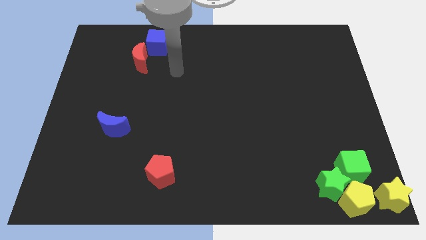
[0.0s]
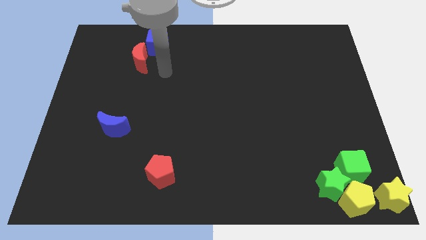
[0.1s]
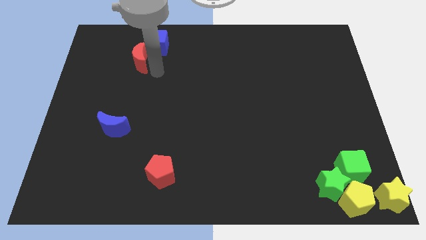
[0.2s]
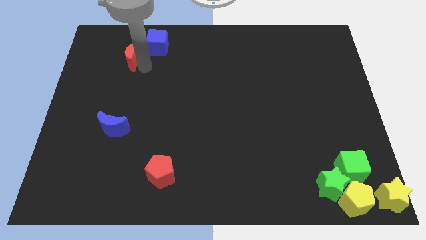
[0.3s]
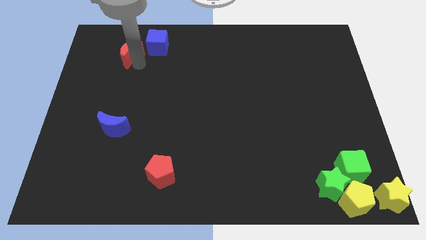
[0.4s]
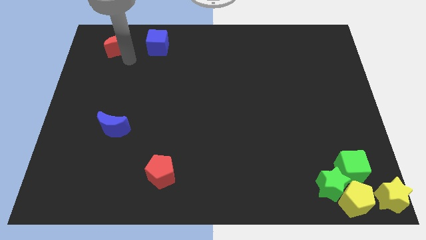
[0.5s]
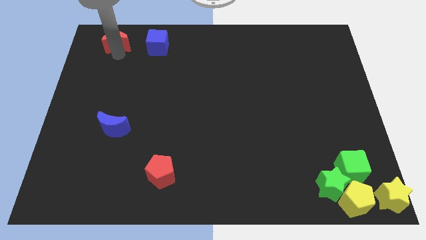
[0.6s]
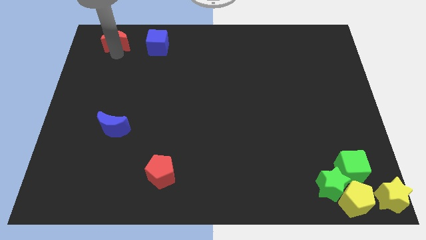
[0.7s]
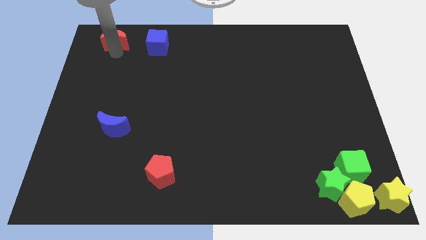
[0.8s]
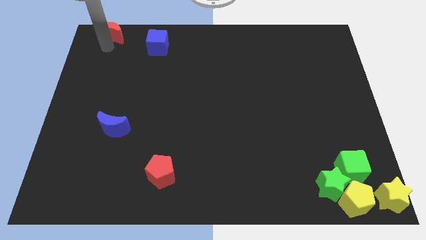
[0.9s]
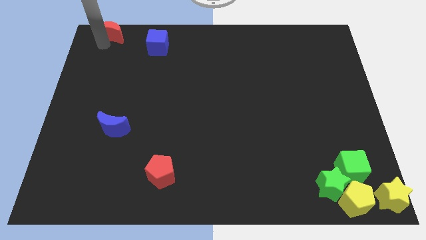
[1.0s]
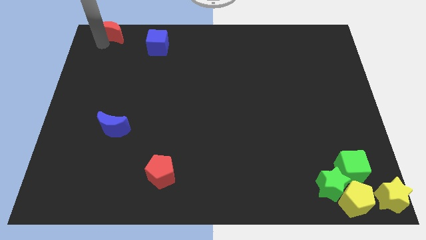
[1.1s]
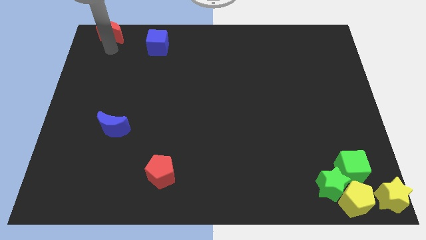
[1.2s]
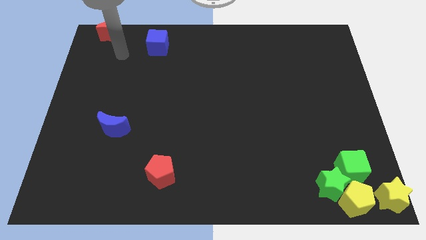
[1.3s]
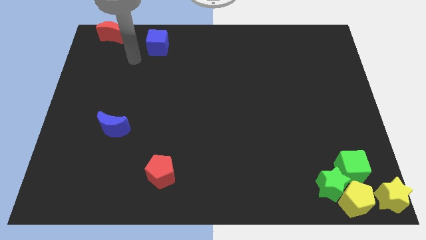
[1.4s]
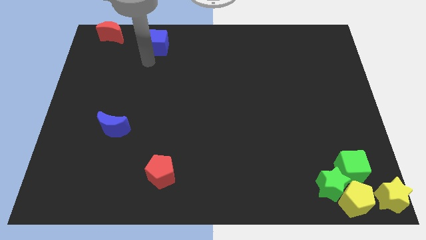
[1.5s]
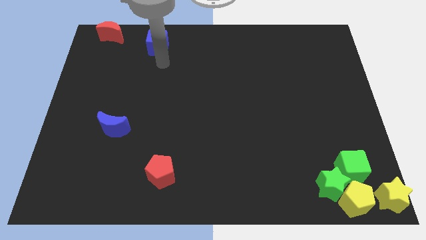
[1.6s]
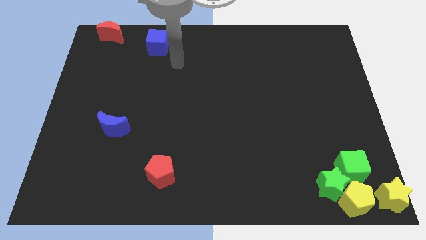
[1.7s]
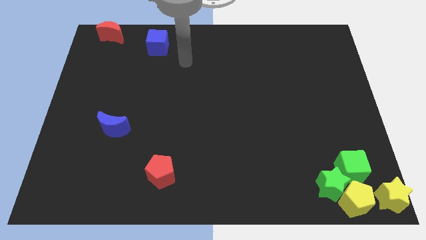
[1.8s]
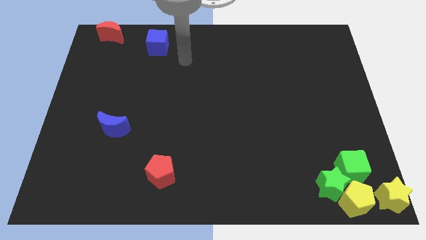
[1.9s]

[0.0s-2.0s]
move the red crescent to the top left side of the blue cube

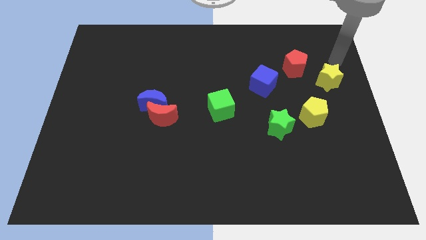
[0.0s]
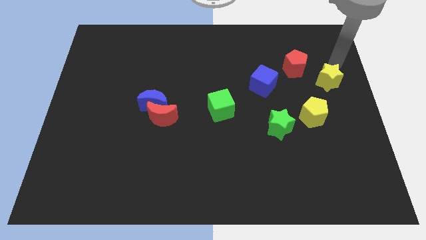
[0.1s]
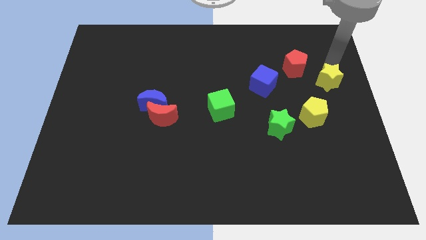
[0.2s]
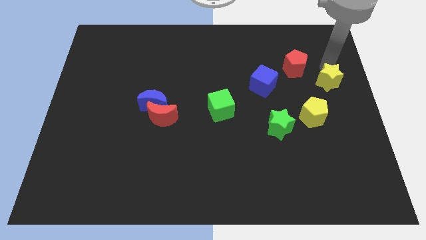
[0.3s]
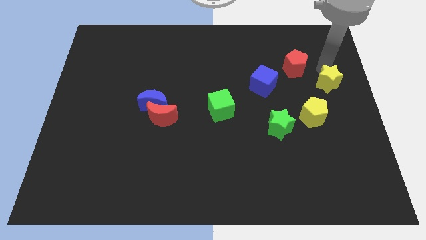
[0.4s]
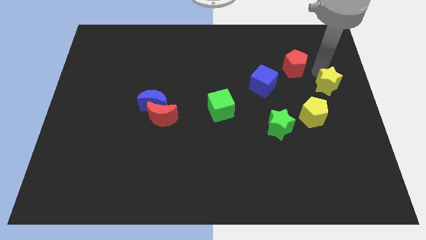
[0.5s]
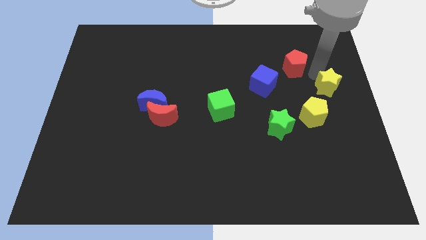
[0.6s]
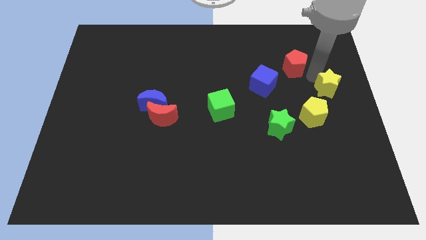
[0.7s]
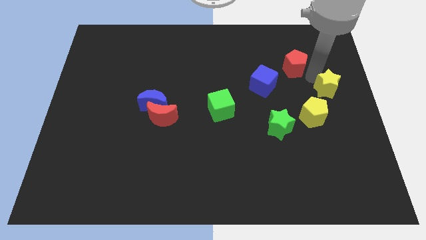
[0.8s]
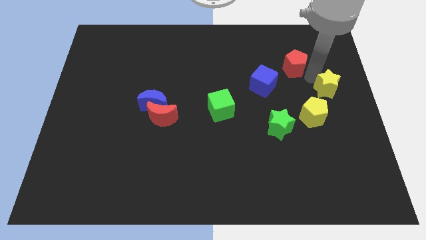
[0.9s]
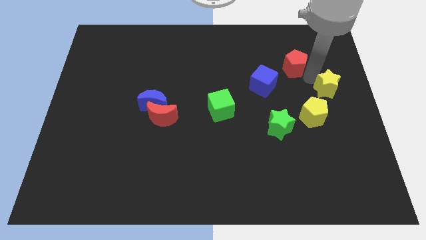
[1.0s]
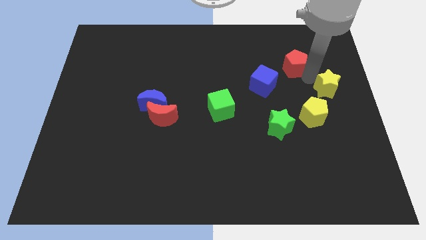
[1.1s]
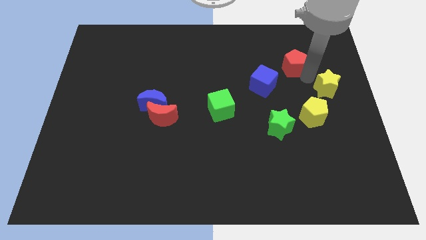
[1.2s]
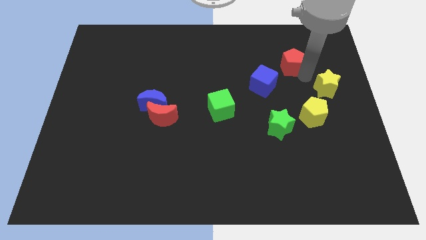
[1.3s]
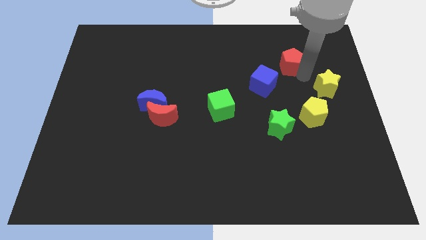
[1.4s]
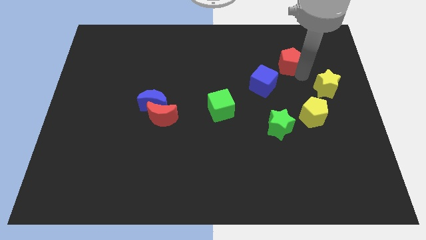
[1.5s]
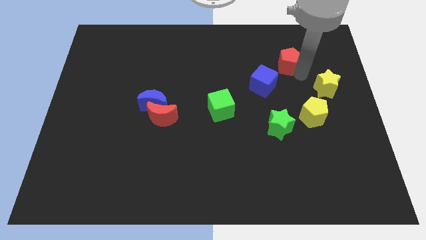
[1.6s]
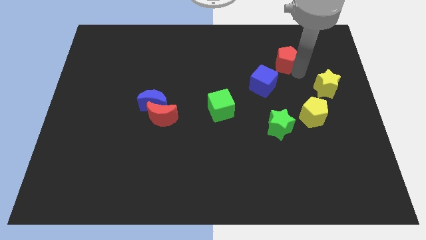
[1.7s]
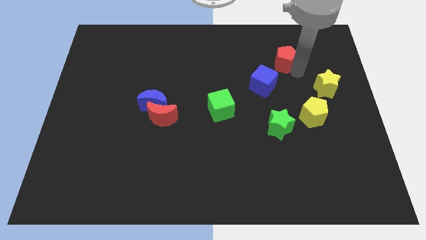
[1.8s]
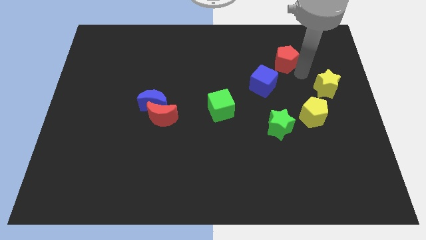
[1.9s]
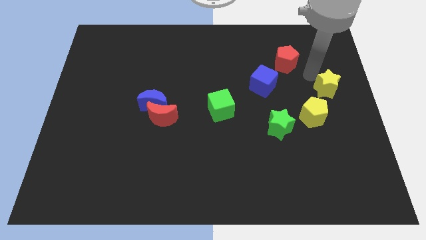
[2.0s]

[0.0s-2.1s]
put the red pentagon at the top right side of the blue cube

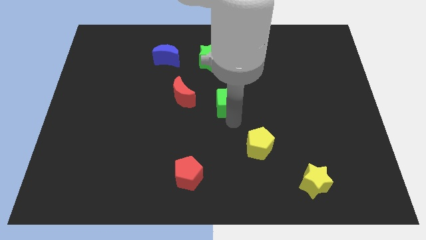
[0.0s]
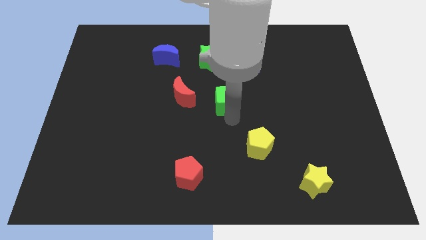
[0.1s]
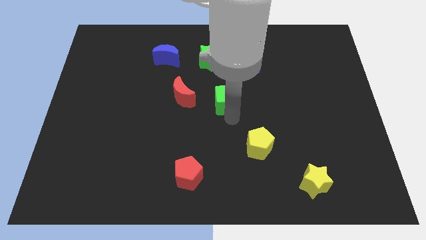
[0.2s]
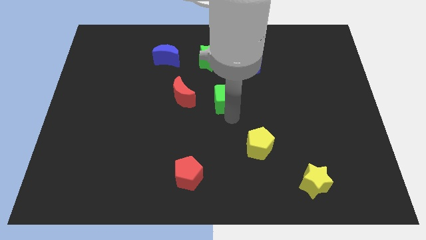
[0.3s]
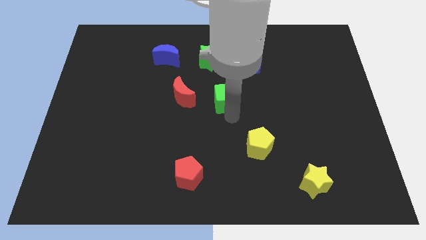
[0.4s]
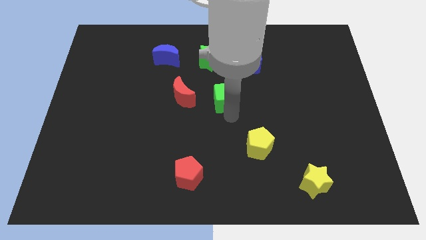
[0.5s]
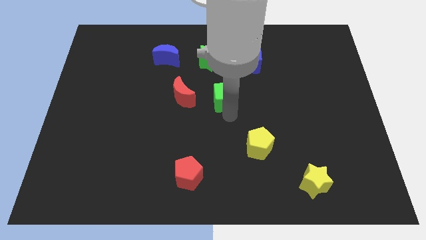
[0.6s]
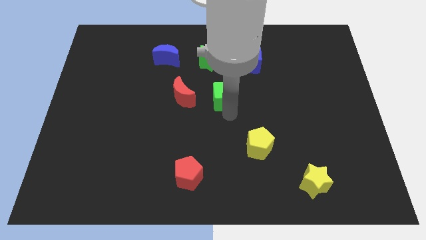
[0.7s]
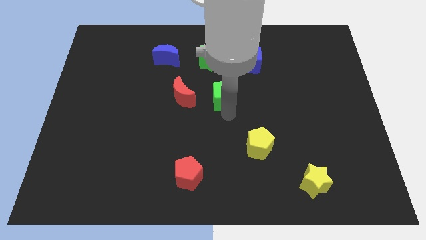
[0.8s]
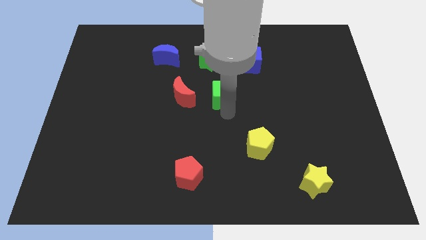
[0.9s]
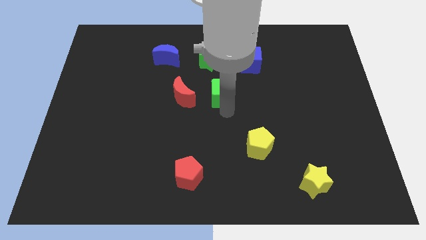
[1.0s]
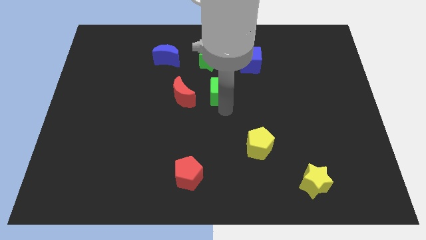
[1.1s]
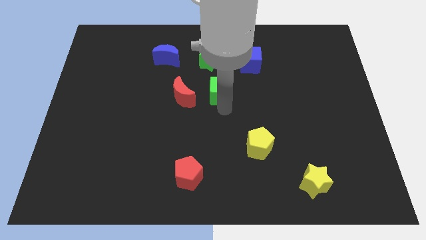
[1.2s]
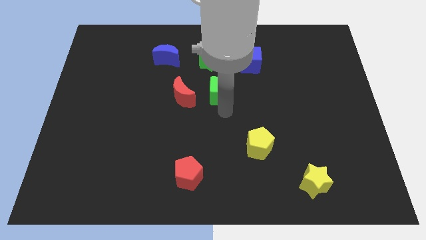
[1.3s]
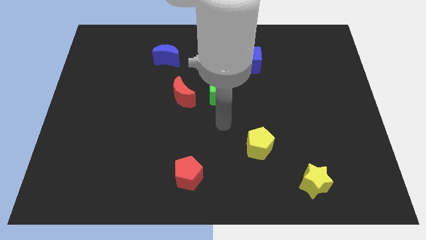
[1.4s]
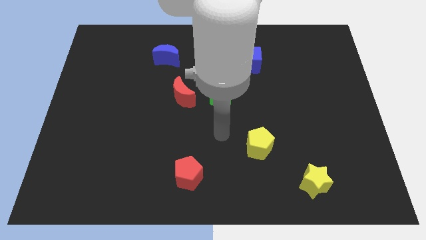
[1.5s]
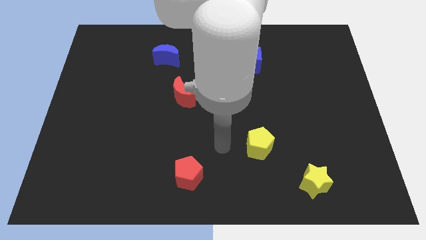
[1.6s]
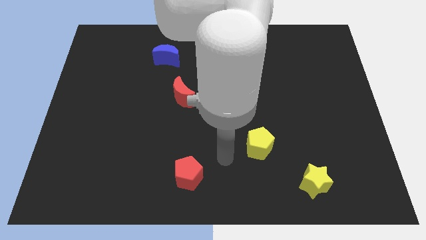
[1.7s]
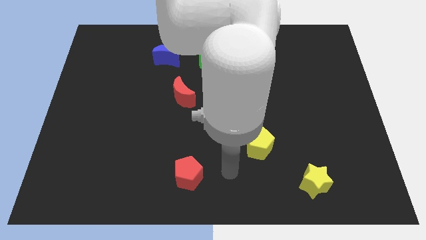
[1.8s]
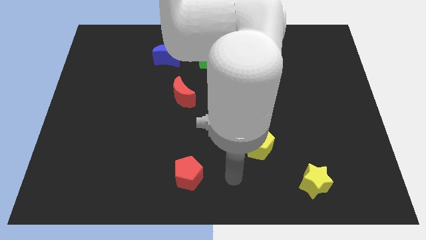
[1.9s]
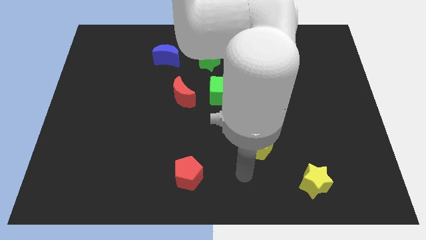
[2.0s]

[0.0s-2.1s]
place the green cube below the green star

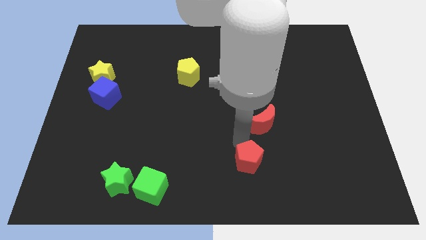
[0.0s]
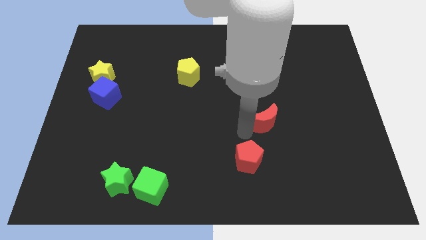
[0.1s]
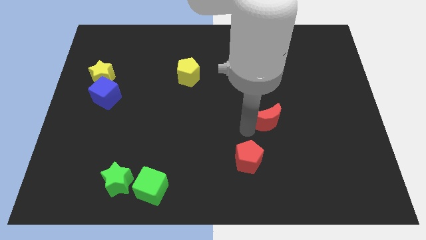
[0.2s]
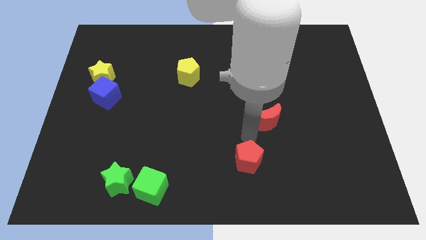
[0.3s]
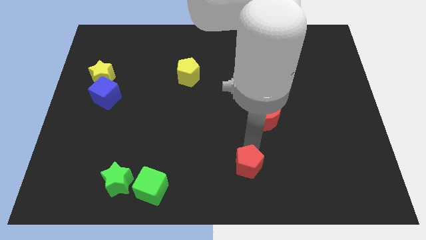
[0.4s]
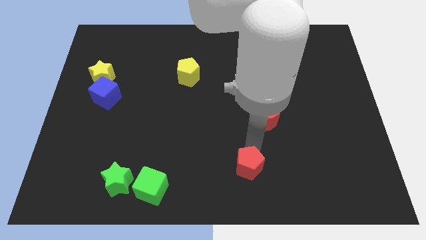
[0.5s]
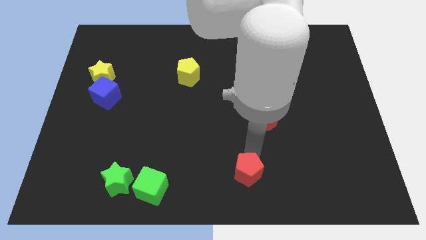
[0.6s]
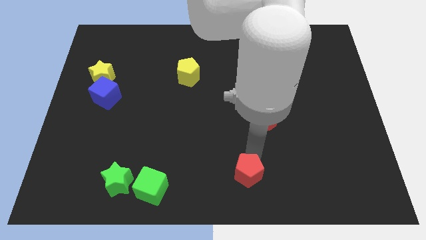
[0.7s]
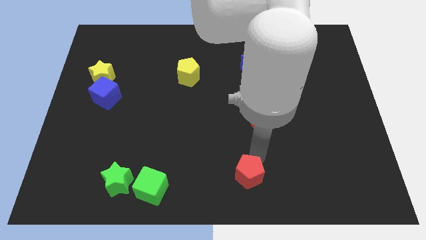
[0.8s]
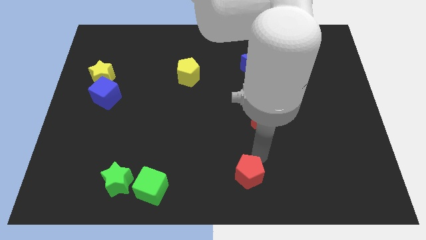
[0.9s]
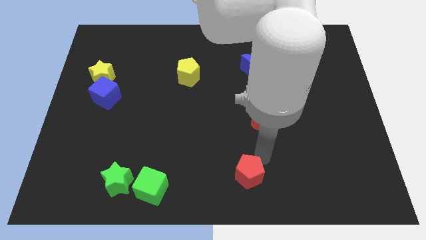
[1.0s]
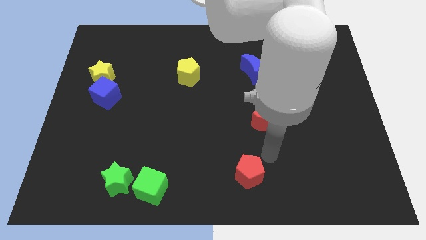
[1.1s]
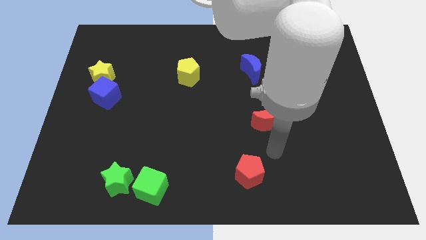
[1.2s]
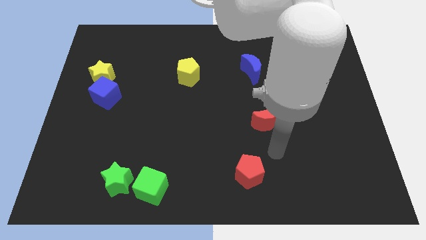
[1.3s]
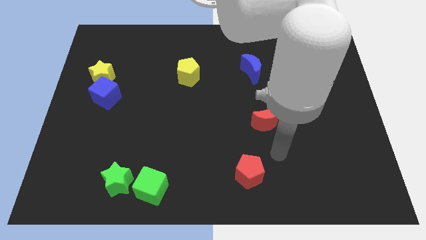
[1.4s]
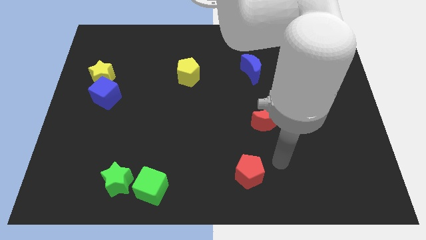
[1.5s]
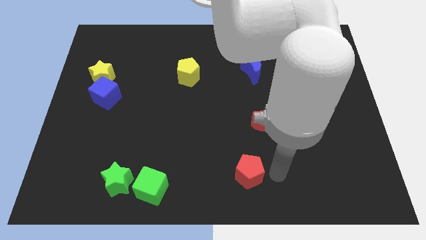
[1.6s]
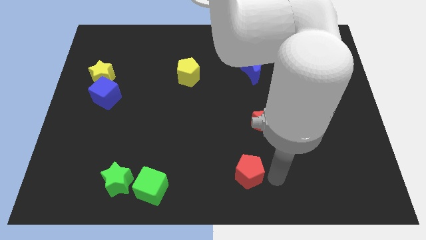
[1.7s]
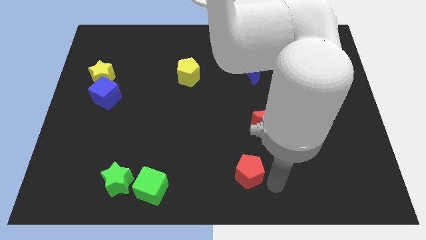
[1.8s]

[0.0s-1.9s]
drag the red pentagon slightly downwards

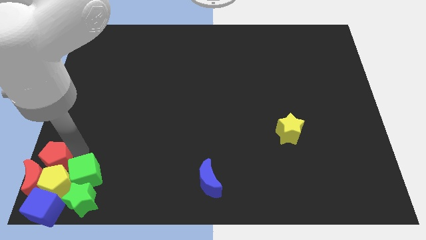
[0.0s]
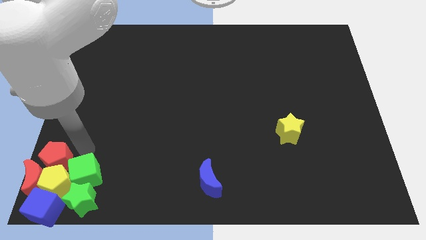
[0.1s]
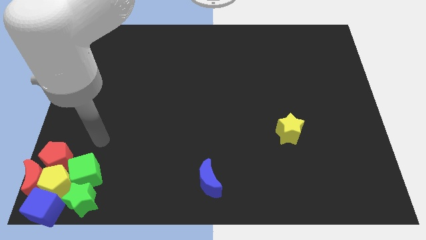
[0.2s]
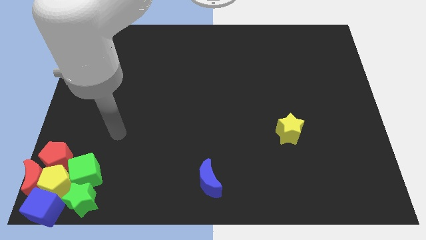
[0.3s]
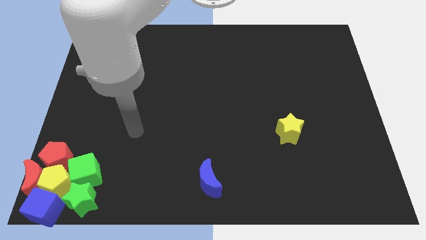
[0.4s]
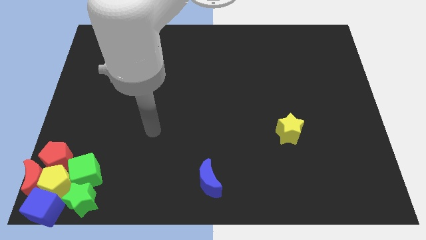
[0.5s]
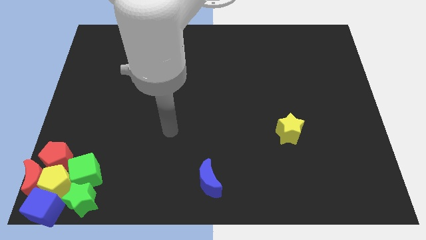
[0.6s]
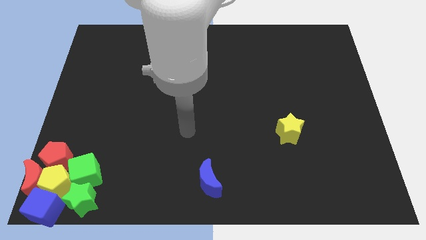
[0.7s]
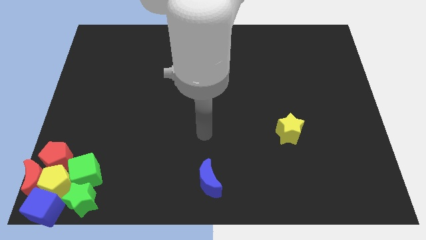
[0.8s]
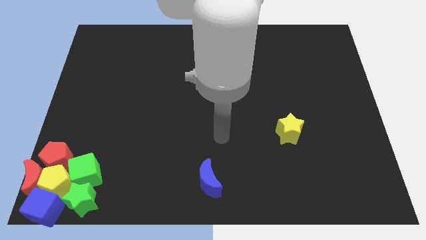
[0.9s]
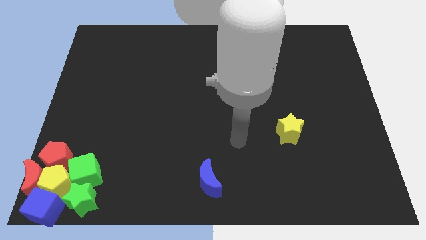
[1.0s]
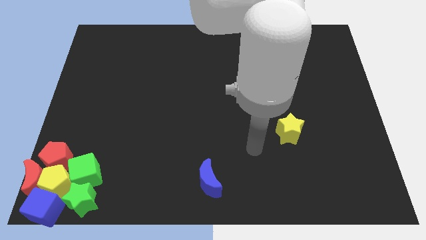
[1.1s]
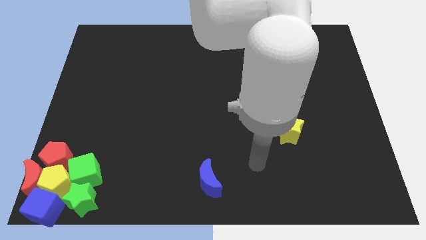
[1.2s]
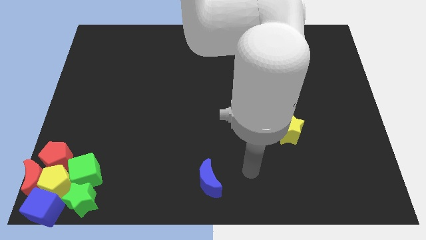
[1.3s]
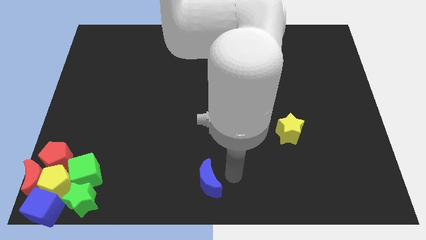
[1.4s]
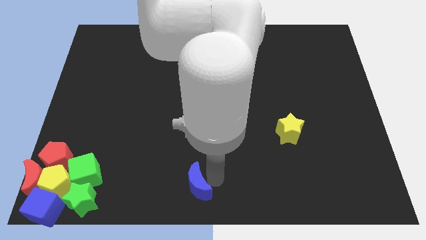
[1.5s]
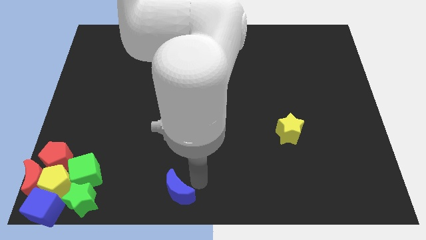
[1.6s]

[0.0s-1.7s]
move the blue crescent towards left
